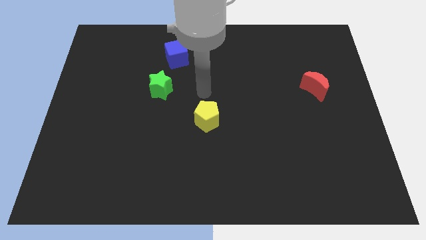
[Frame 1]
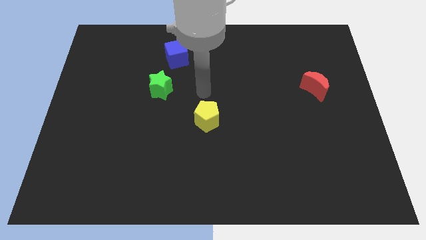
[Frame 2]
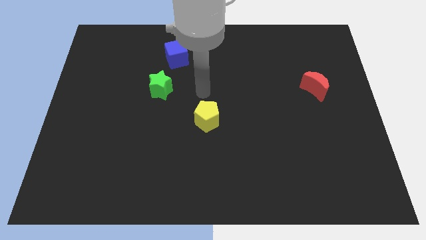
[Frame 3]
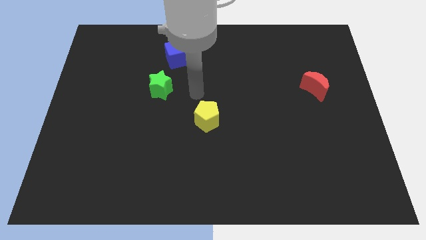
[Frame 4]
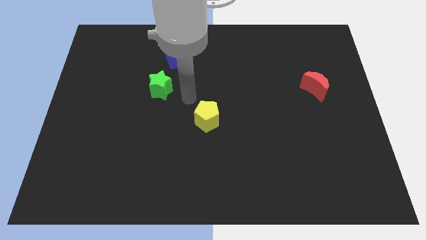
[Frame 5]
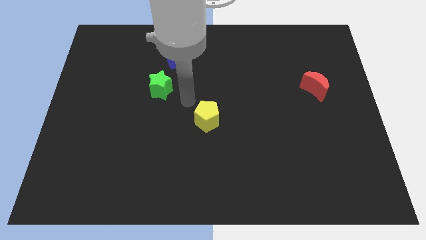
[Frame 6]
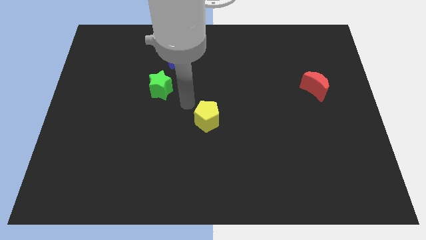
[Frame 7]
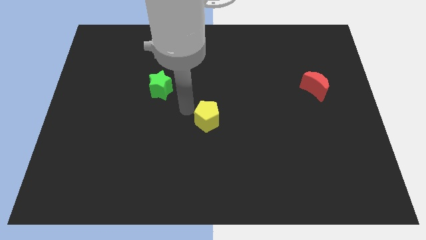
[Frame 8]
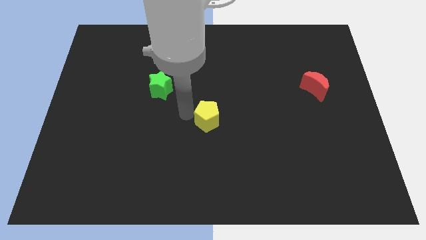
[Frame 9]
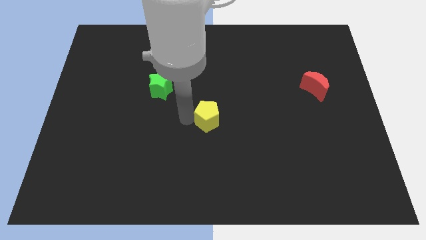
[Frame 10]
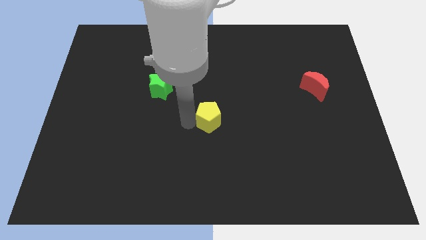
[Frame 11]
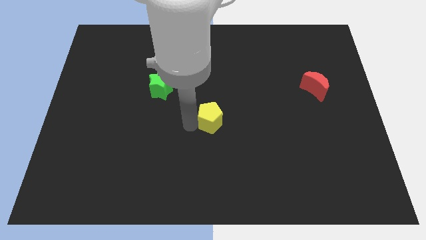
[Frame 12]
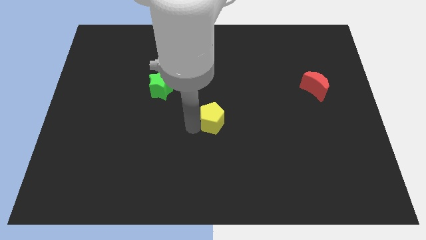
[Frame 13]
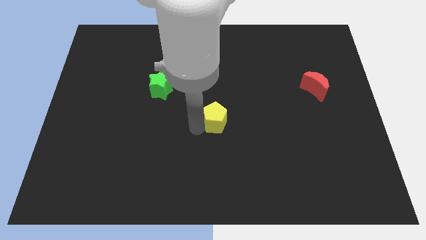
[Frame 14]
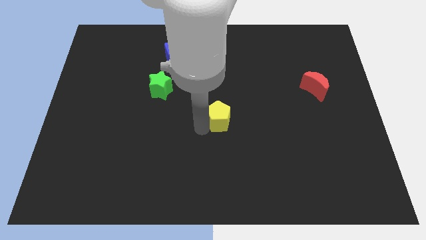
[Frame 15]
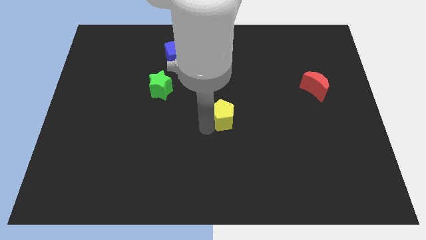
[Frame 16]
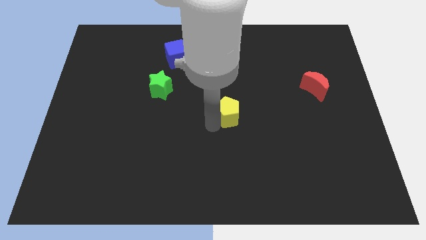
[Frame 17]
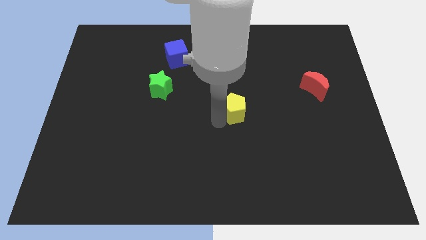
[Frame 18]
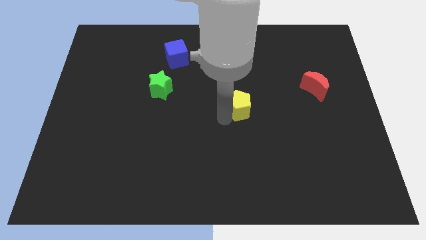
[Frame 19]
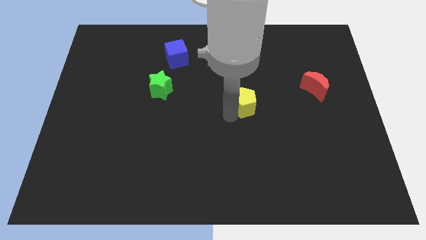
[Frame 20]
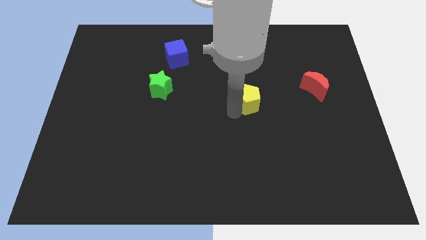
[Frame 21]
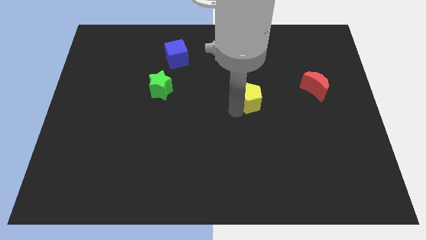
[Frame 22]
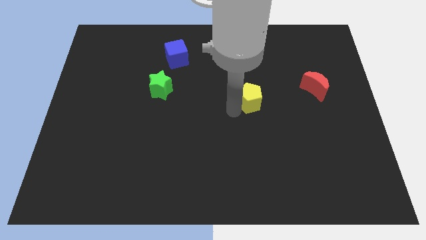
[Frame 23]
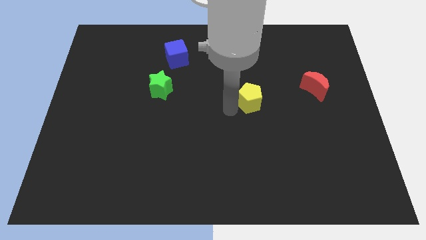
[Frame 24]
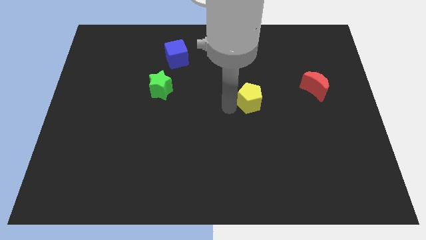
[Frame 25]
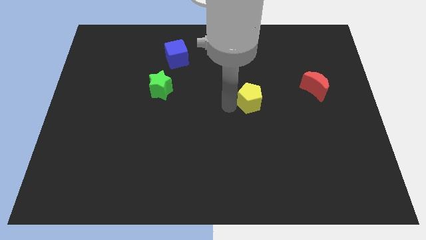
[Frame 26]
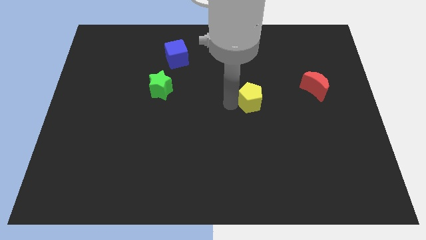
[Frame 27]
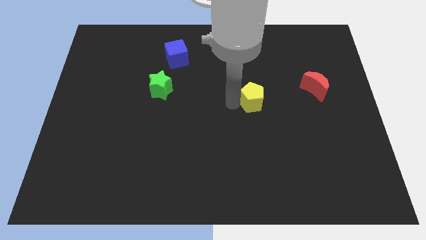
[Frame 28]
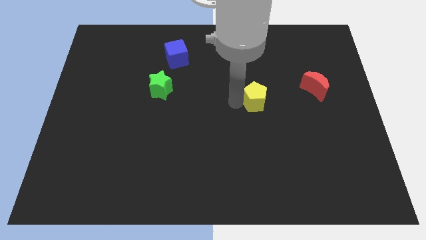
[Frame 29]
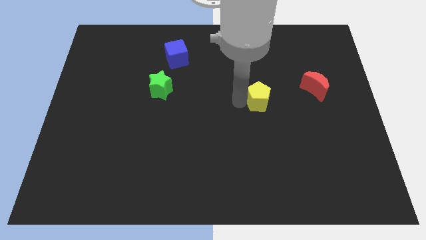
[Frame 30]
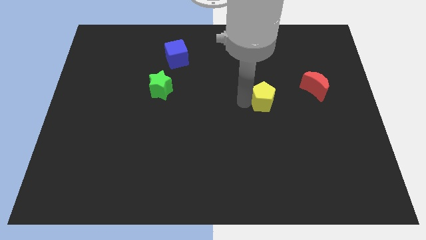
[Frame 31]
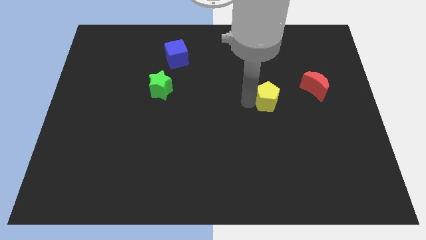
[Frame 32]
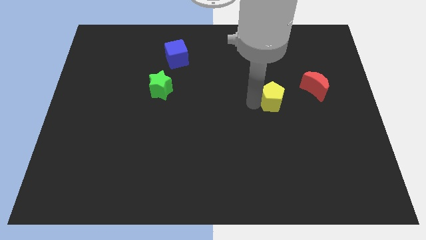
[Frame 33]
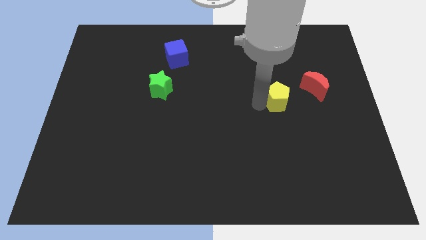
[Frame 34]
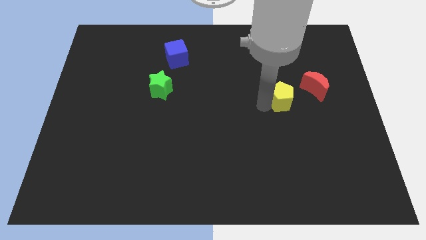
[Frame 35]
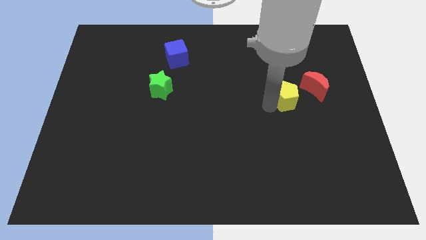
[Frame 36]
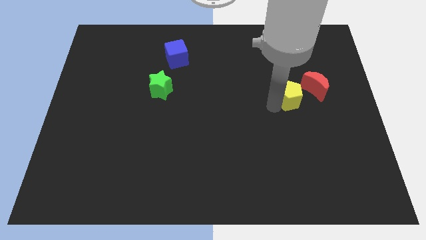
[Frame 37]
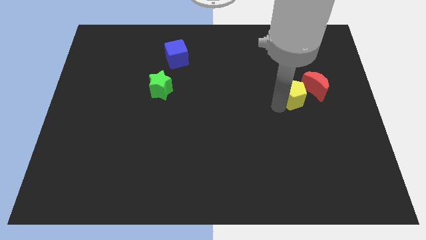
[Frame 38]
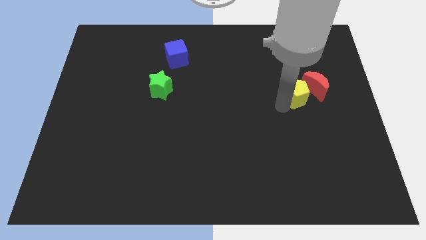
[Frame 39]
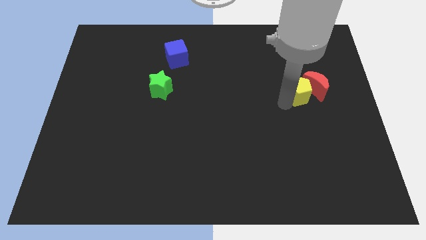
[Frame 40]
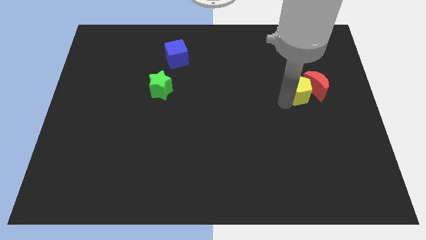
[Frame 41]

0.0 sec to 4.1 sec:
push the yellow block close to the red block

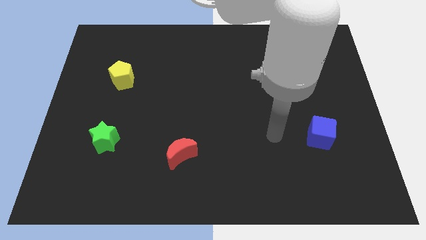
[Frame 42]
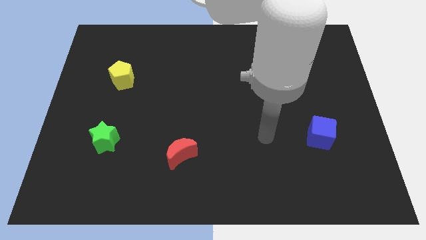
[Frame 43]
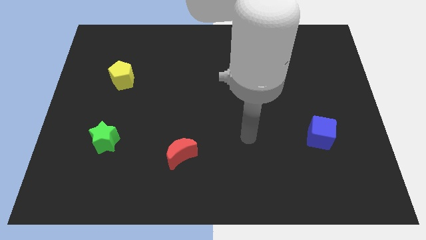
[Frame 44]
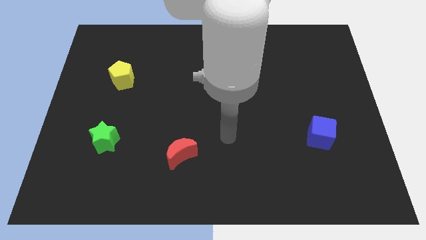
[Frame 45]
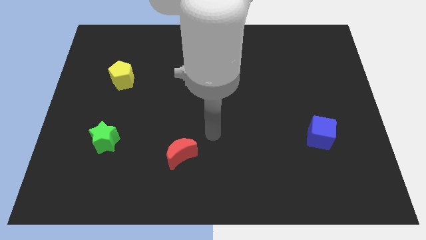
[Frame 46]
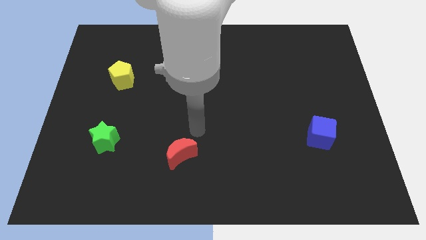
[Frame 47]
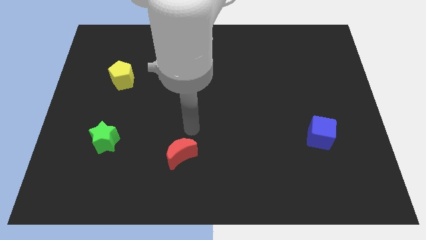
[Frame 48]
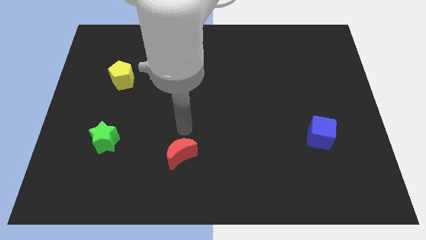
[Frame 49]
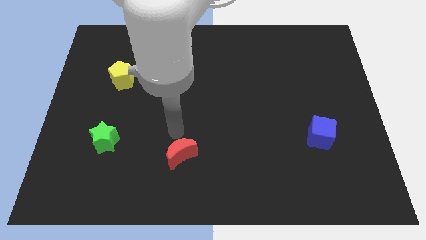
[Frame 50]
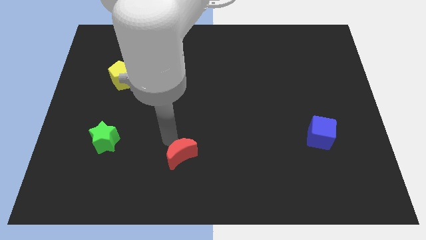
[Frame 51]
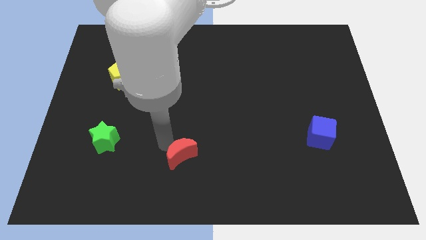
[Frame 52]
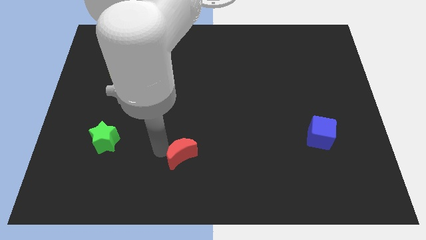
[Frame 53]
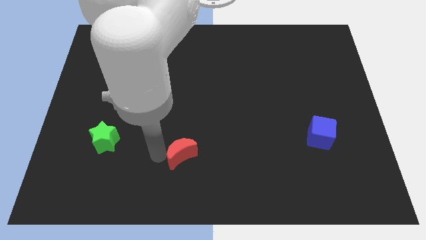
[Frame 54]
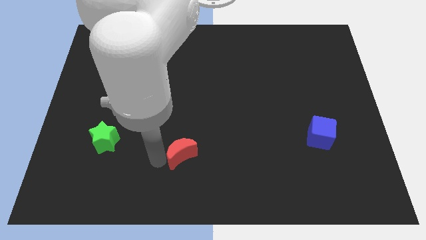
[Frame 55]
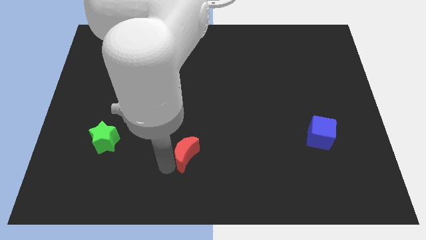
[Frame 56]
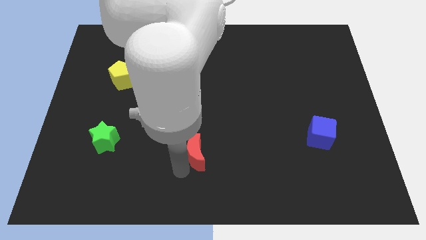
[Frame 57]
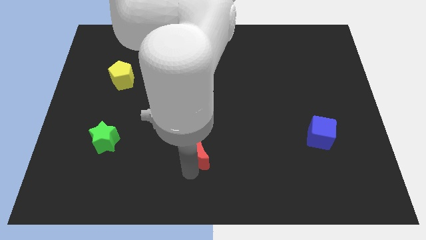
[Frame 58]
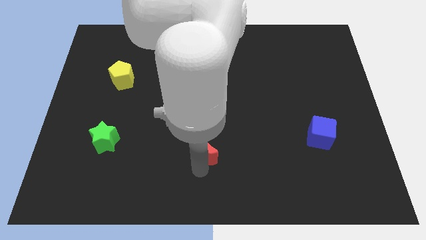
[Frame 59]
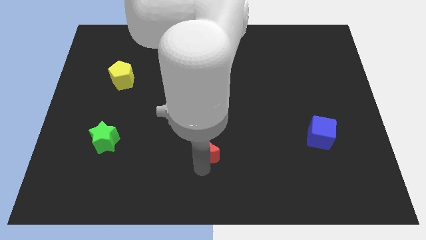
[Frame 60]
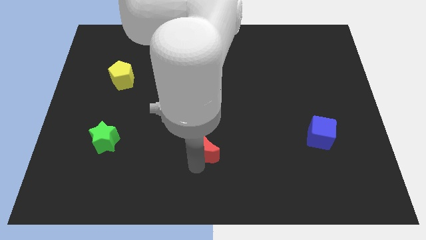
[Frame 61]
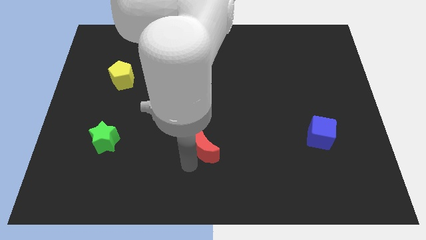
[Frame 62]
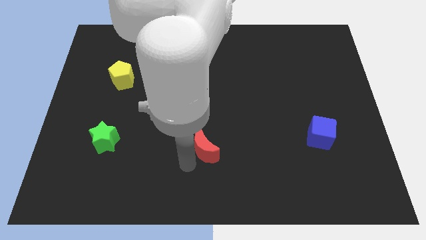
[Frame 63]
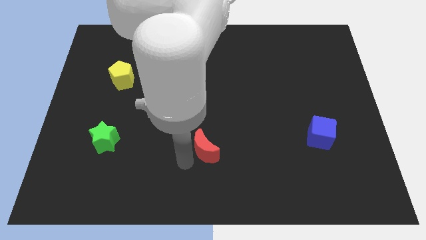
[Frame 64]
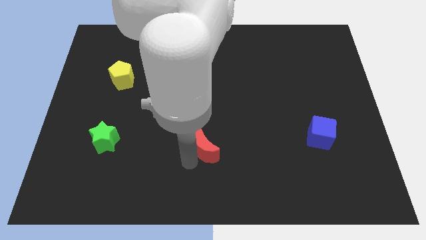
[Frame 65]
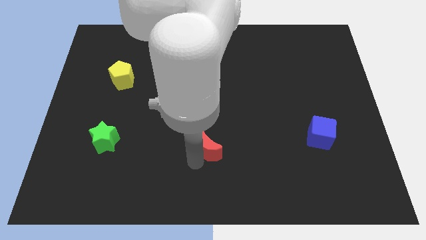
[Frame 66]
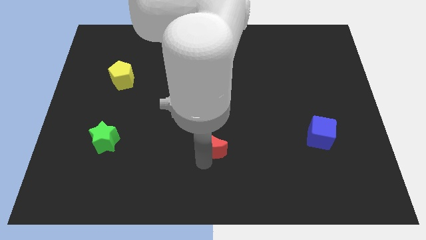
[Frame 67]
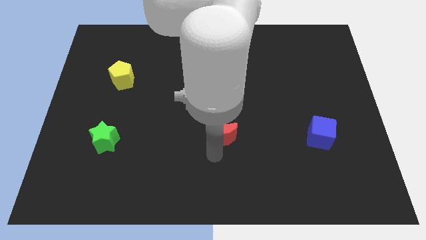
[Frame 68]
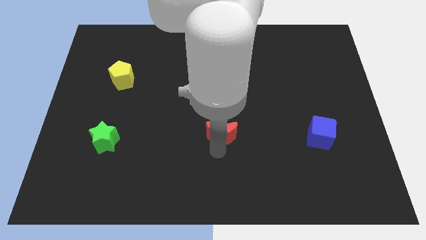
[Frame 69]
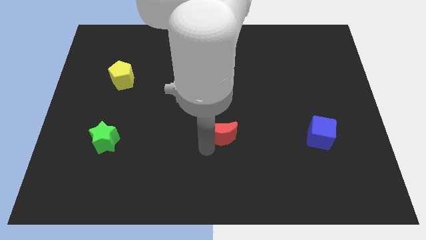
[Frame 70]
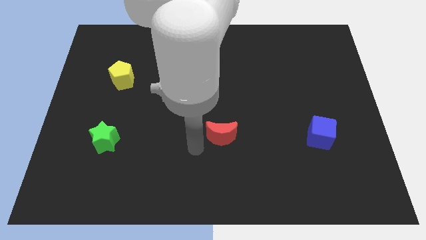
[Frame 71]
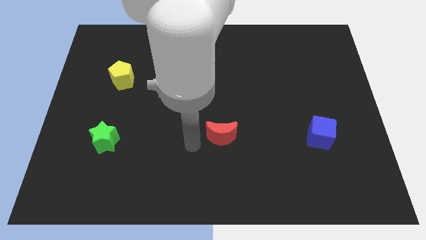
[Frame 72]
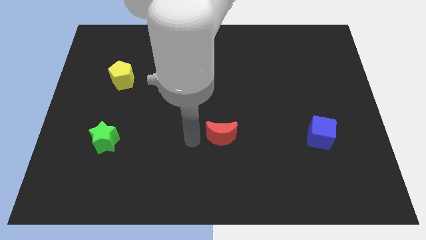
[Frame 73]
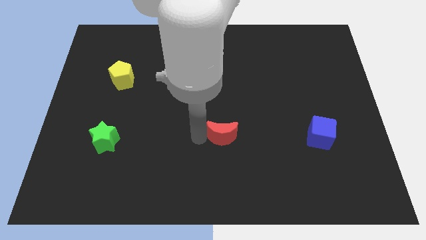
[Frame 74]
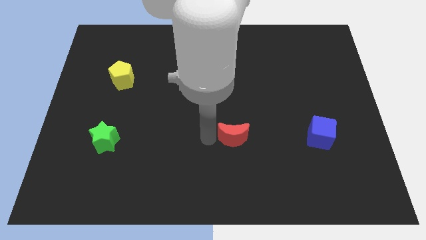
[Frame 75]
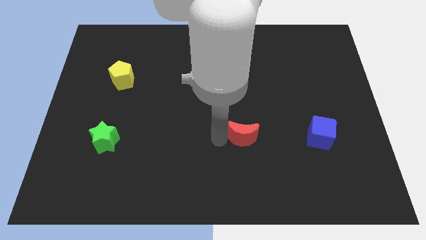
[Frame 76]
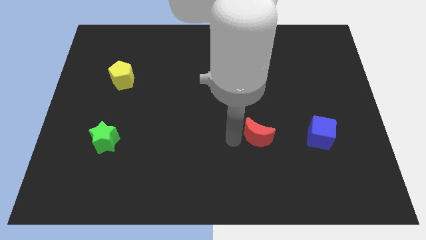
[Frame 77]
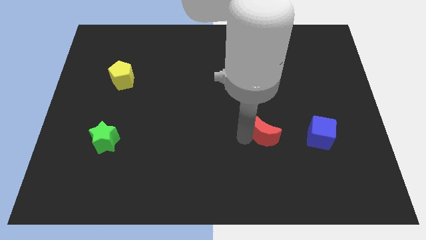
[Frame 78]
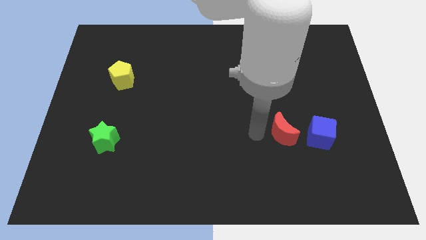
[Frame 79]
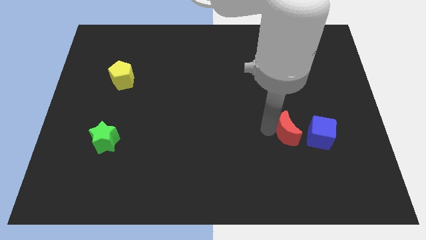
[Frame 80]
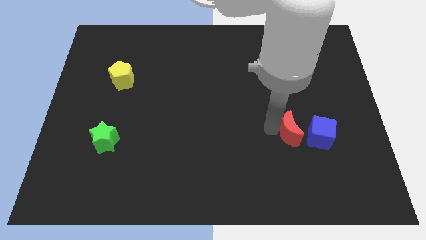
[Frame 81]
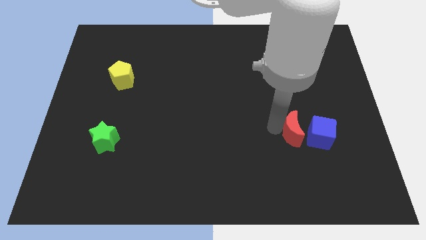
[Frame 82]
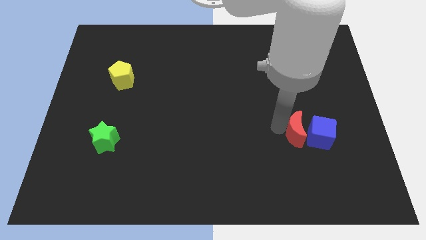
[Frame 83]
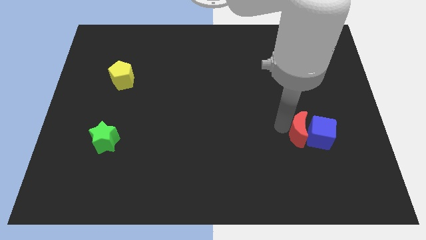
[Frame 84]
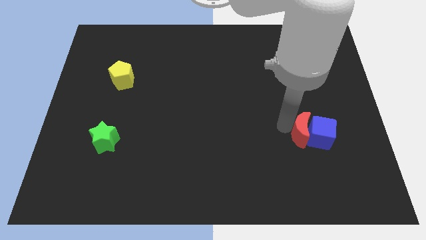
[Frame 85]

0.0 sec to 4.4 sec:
push the red moon next to the blue cube
